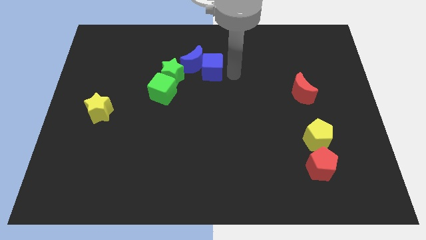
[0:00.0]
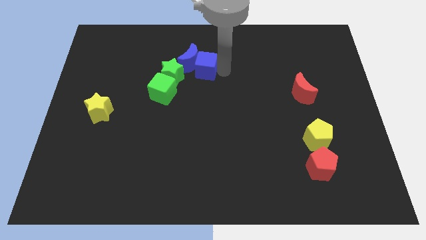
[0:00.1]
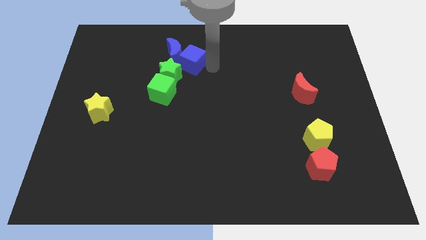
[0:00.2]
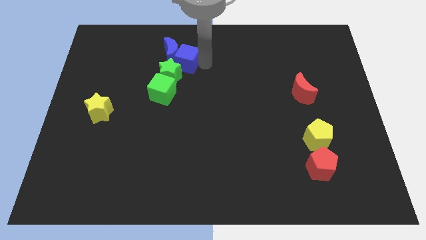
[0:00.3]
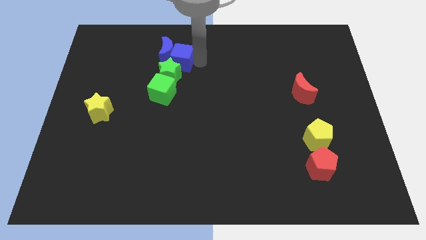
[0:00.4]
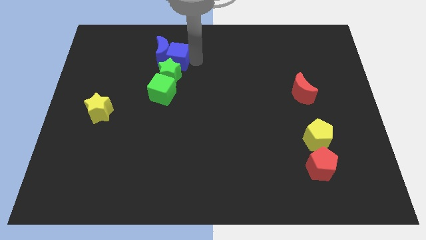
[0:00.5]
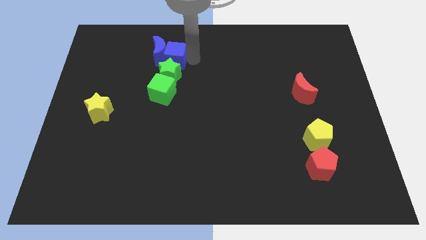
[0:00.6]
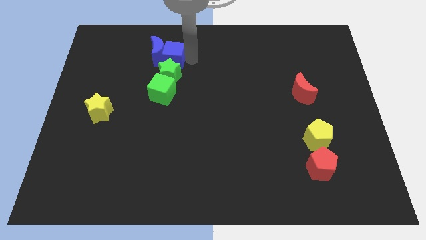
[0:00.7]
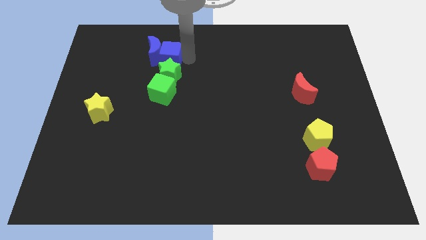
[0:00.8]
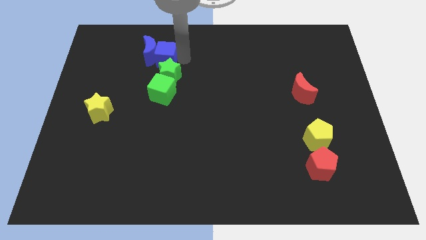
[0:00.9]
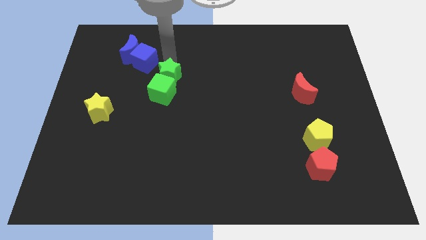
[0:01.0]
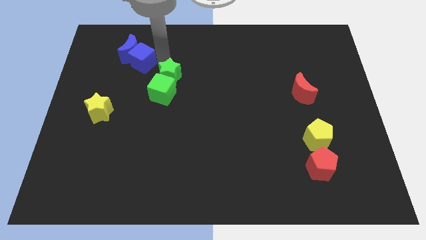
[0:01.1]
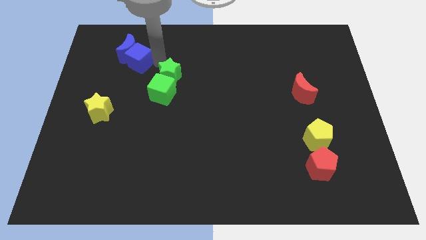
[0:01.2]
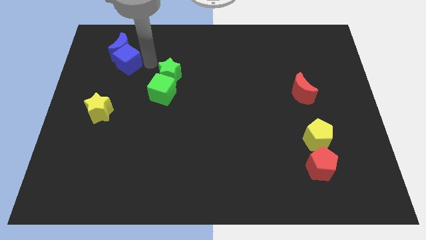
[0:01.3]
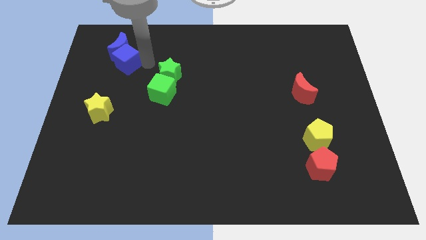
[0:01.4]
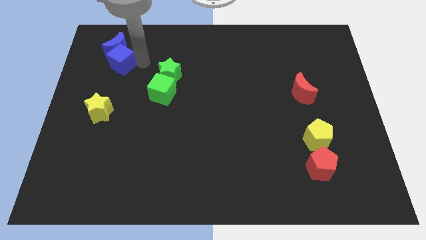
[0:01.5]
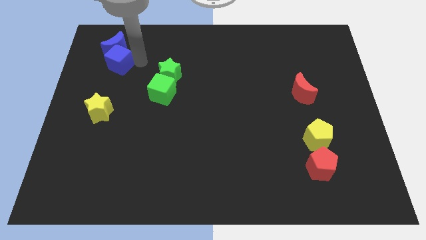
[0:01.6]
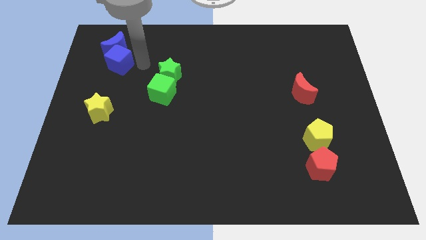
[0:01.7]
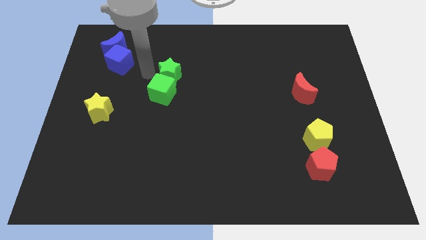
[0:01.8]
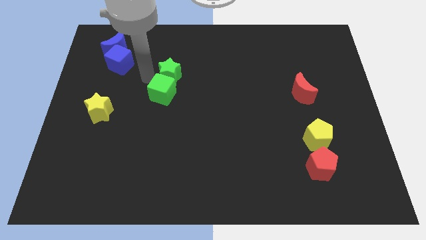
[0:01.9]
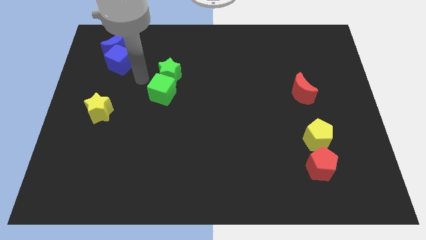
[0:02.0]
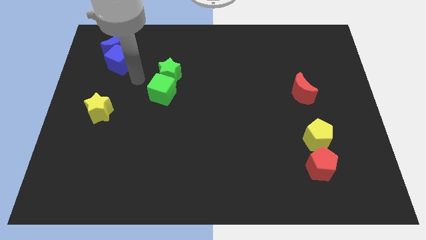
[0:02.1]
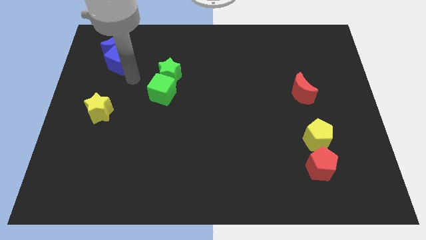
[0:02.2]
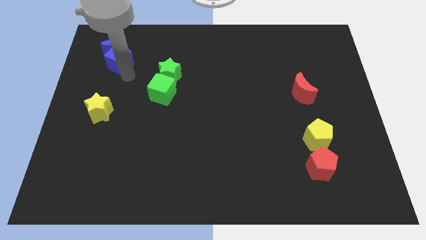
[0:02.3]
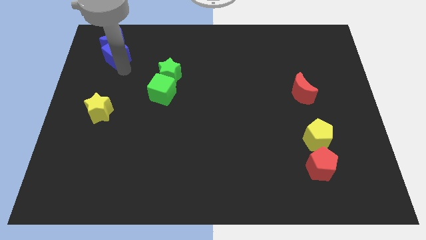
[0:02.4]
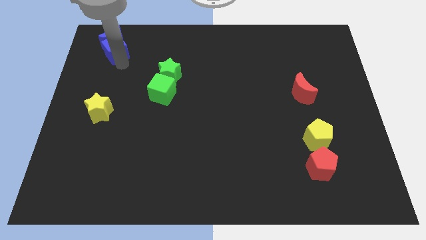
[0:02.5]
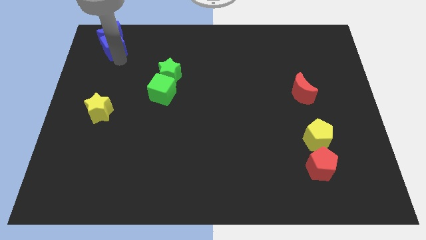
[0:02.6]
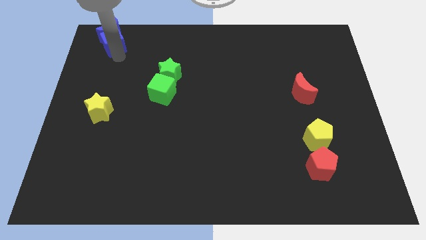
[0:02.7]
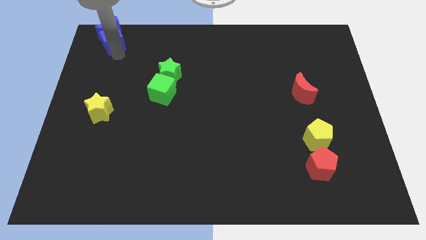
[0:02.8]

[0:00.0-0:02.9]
place blue cube above yellow star

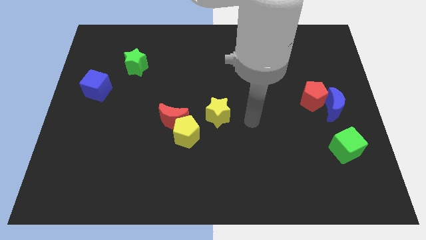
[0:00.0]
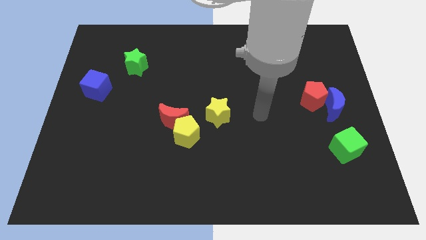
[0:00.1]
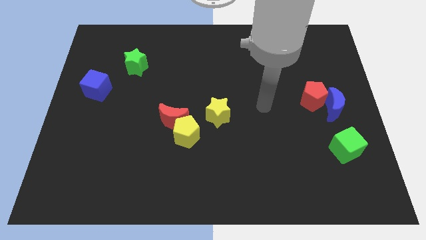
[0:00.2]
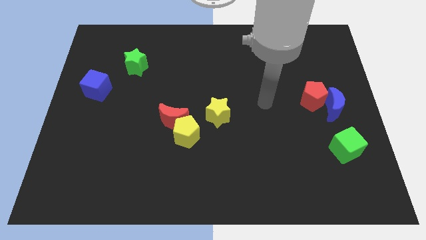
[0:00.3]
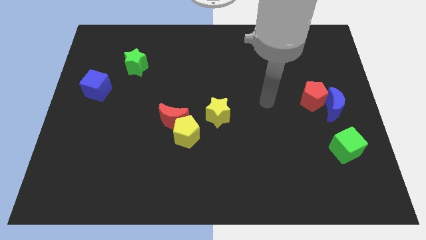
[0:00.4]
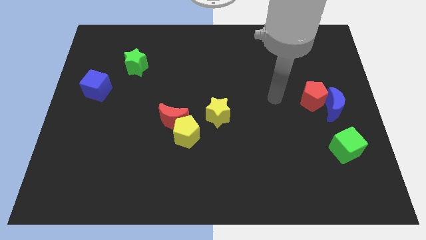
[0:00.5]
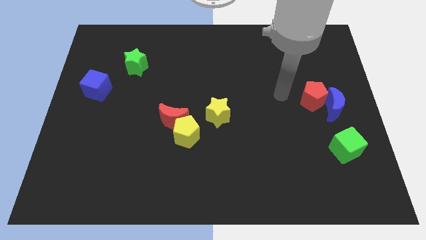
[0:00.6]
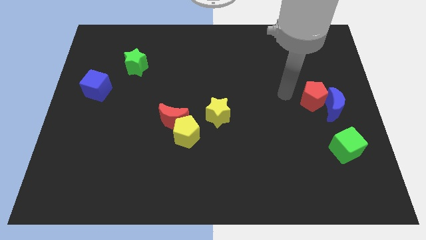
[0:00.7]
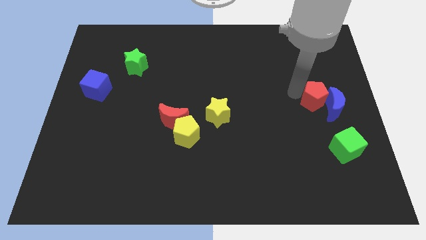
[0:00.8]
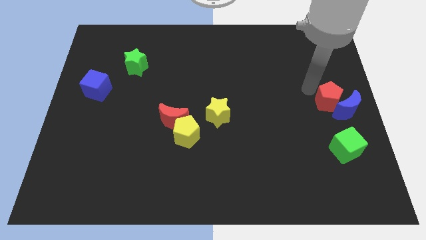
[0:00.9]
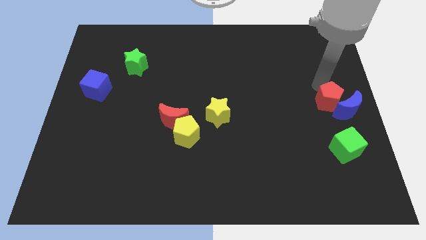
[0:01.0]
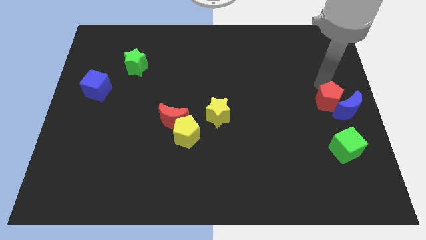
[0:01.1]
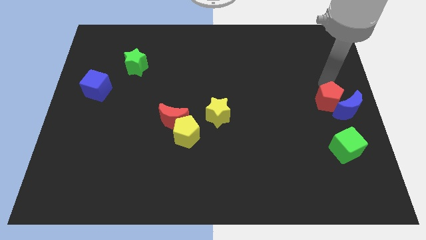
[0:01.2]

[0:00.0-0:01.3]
push red pentagon in to blue crescent

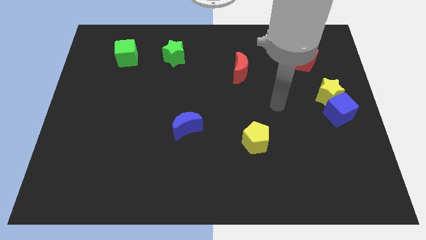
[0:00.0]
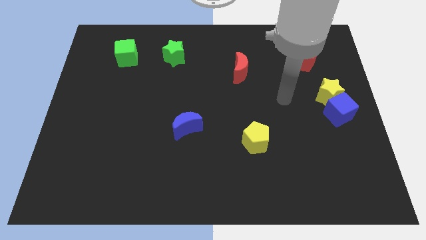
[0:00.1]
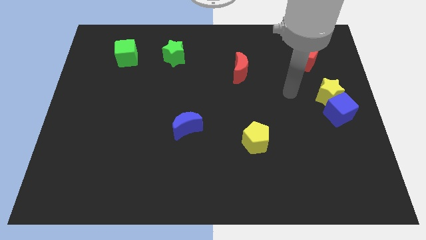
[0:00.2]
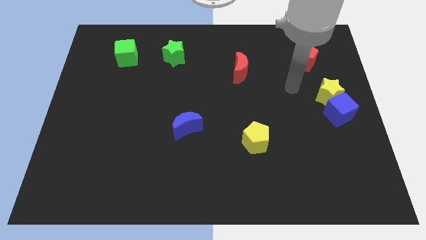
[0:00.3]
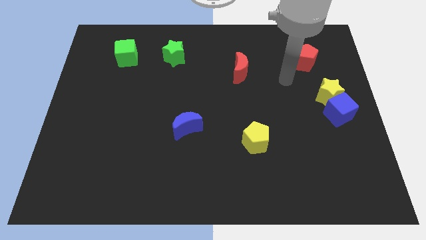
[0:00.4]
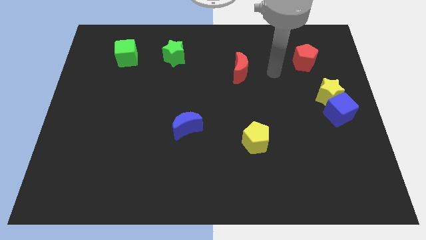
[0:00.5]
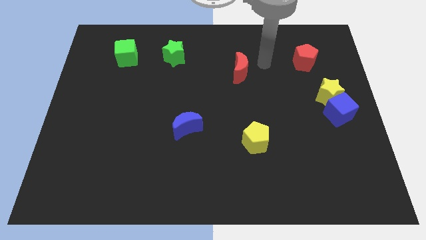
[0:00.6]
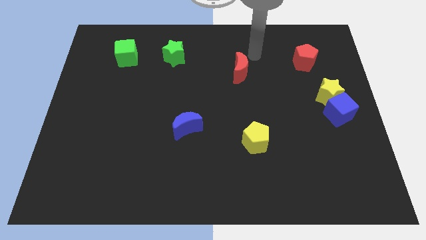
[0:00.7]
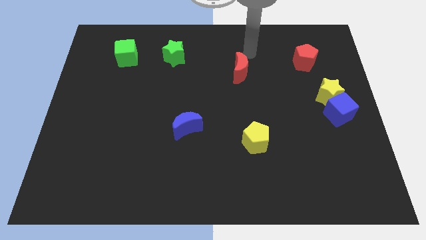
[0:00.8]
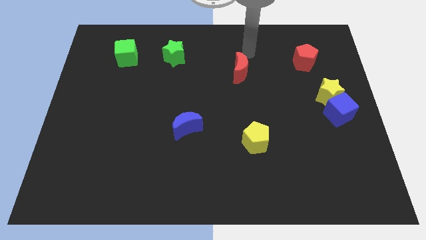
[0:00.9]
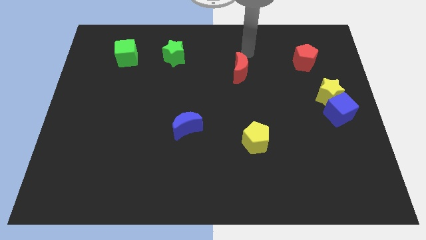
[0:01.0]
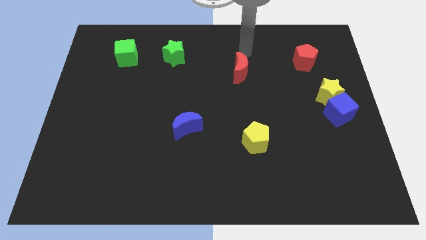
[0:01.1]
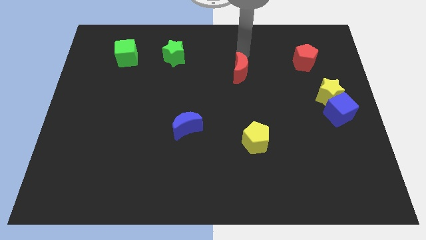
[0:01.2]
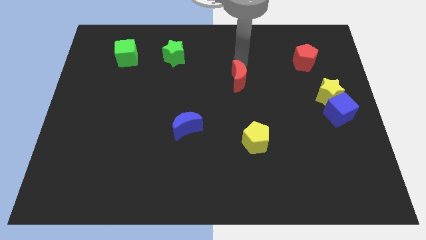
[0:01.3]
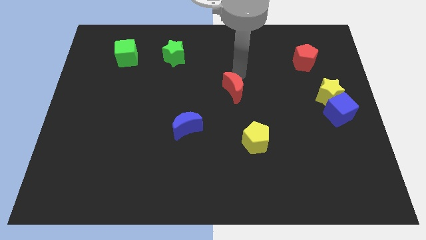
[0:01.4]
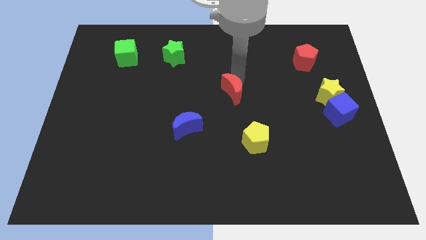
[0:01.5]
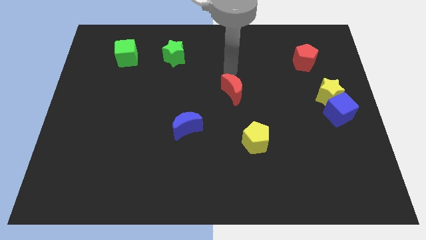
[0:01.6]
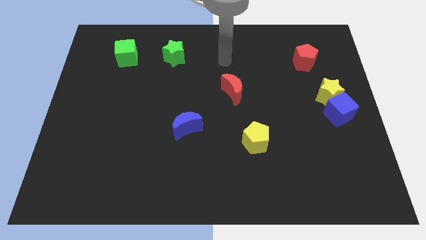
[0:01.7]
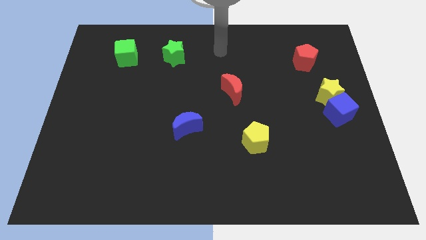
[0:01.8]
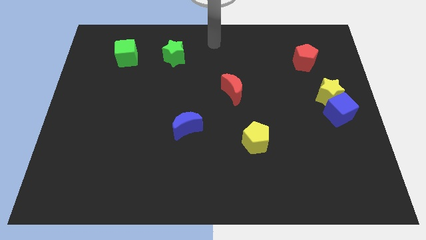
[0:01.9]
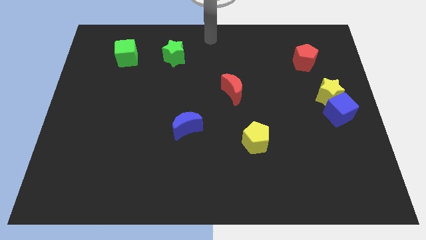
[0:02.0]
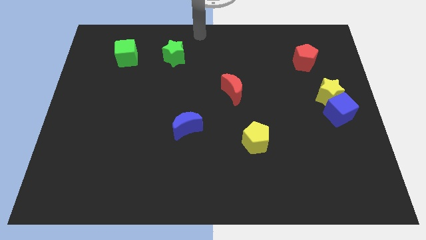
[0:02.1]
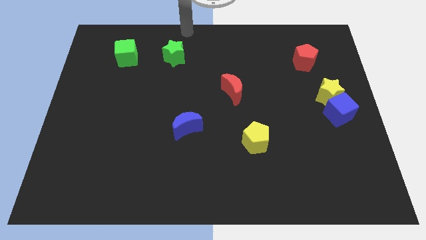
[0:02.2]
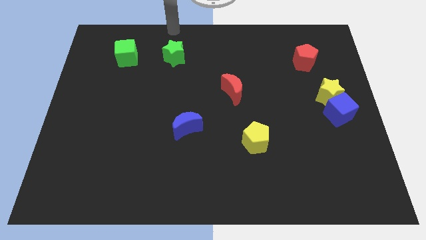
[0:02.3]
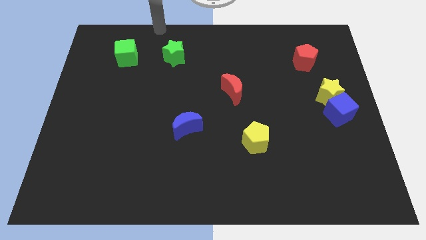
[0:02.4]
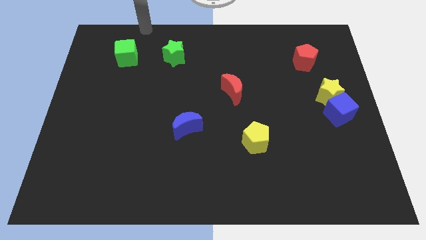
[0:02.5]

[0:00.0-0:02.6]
place the red moon in between the red pentagon and blue moon

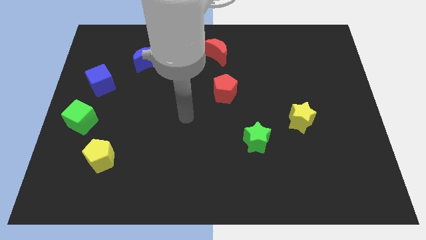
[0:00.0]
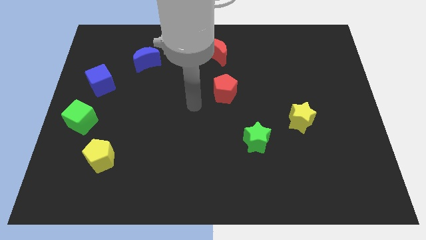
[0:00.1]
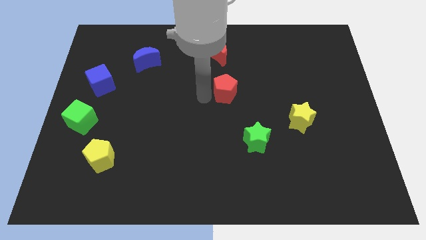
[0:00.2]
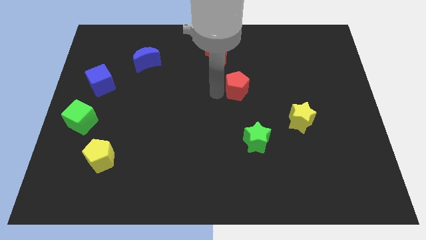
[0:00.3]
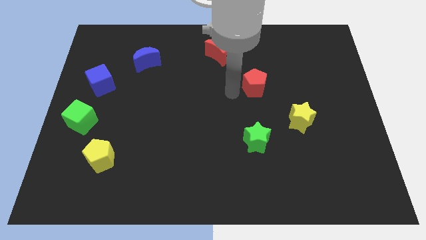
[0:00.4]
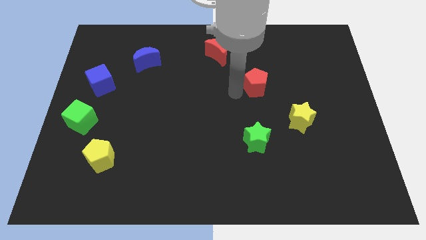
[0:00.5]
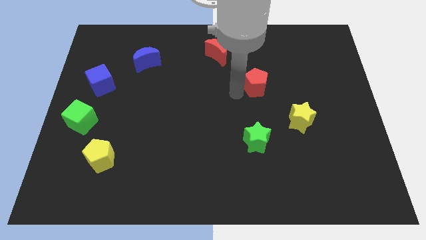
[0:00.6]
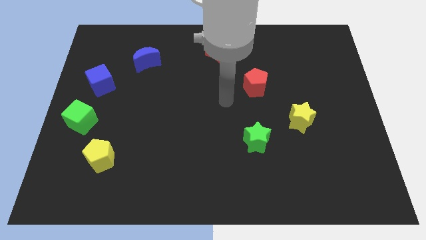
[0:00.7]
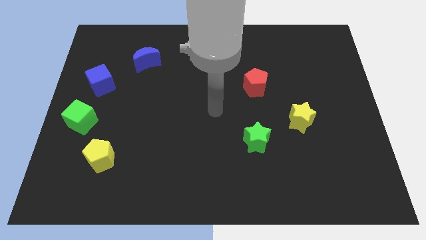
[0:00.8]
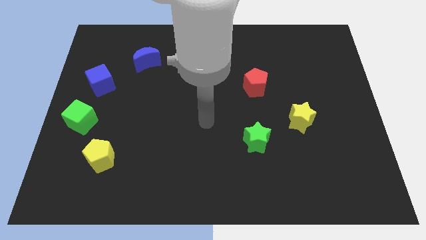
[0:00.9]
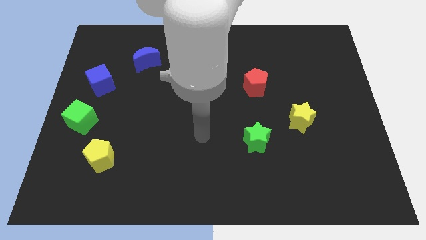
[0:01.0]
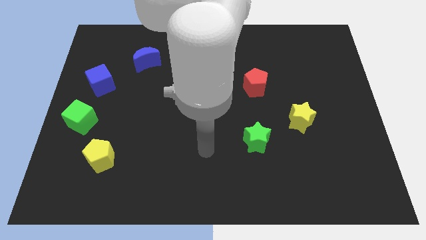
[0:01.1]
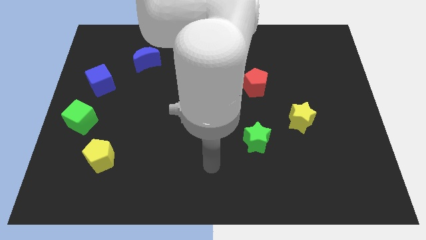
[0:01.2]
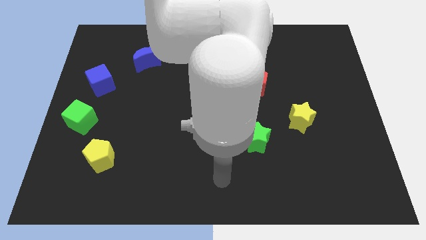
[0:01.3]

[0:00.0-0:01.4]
move the red pentagon slightly to the right center of the board

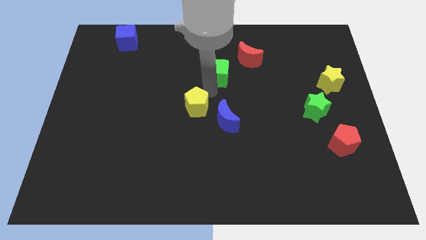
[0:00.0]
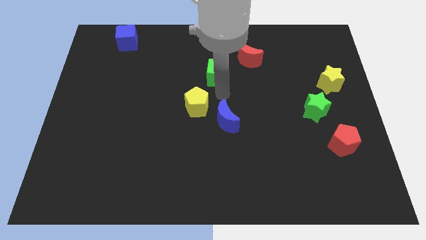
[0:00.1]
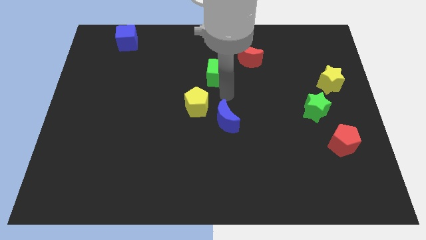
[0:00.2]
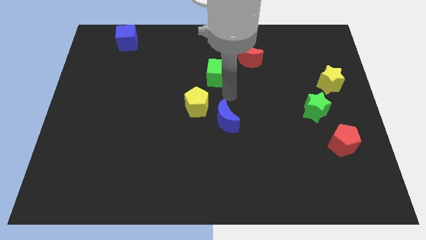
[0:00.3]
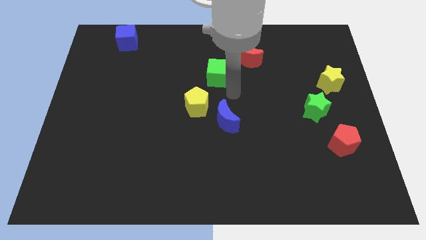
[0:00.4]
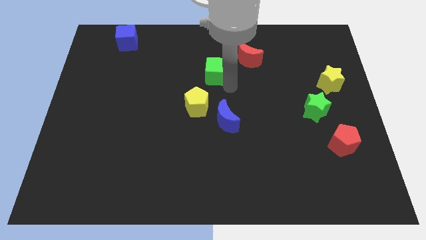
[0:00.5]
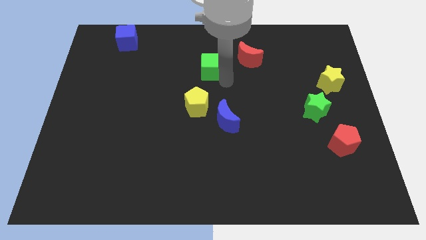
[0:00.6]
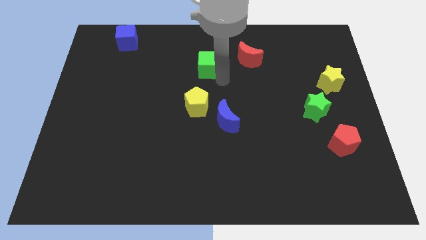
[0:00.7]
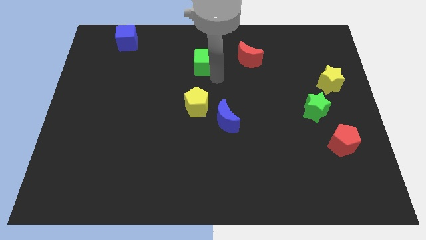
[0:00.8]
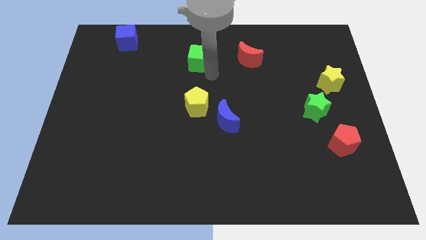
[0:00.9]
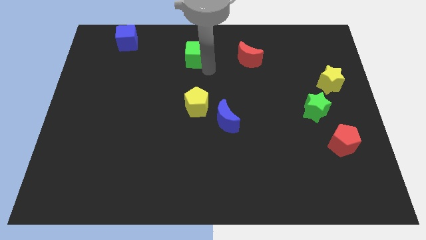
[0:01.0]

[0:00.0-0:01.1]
place green cube above the yellow pentagon
